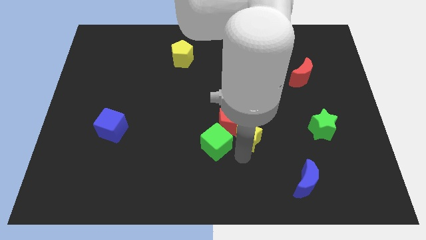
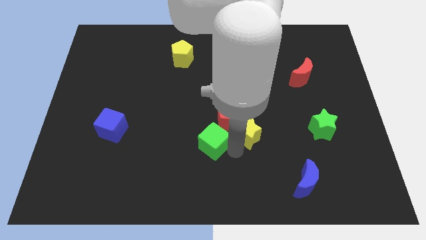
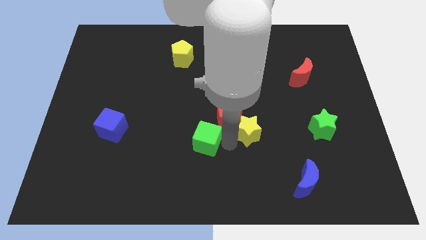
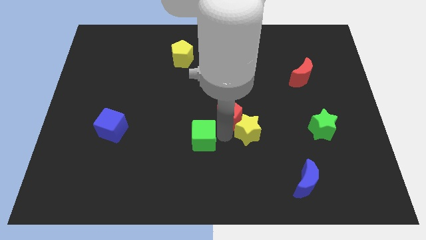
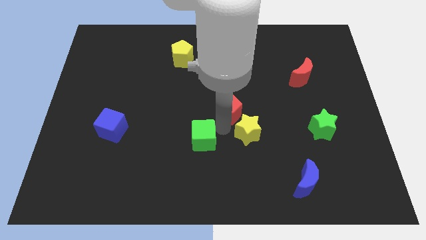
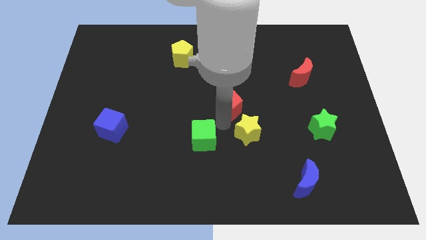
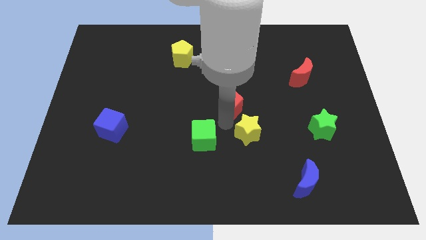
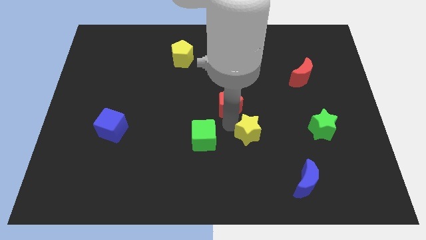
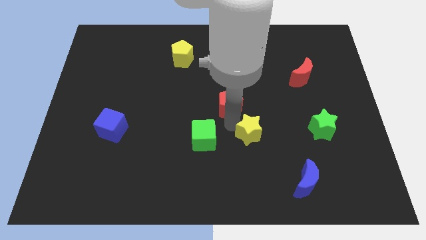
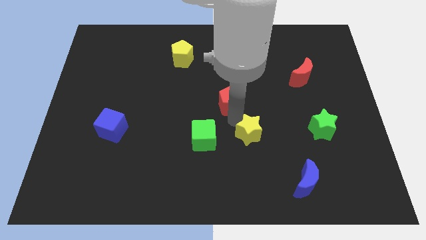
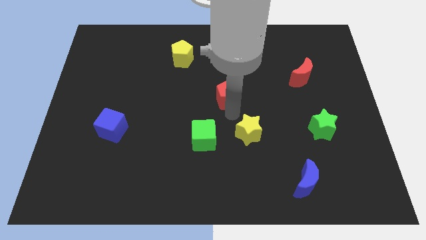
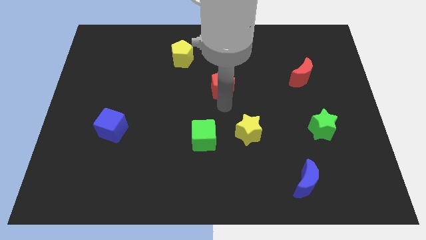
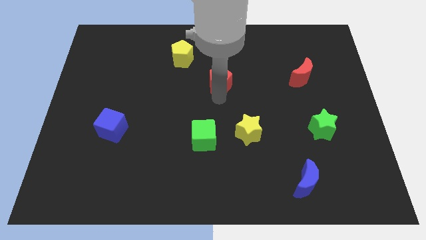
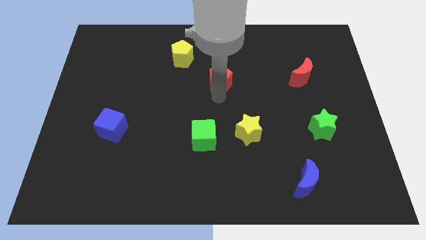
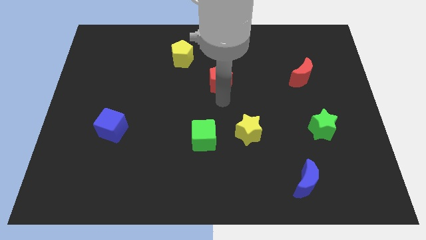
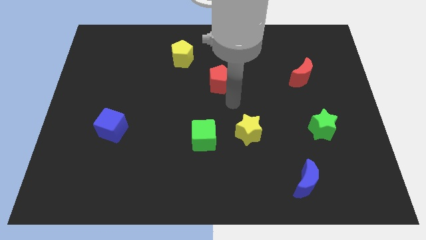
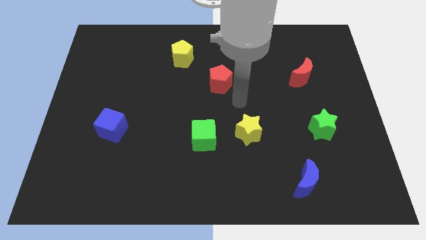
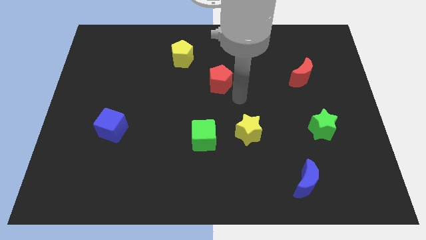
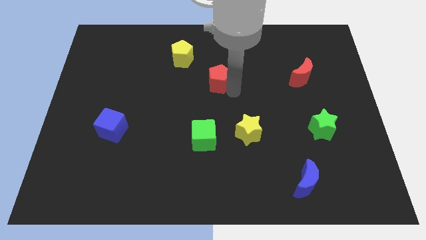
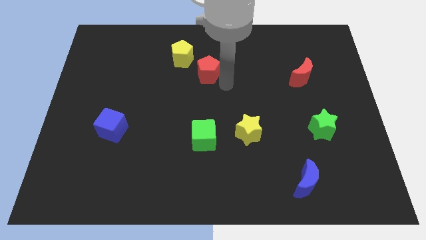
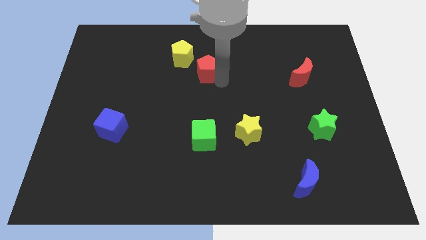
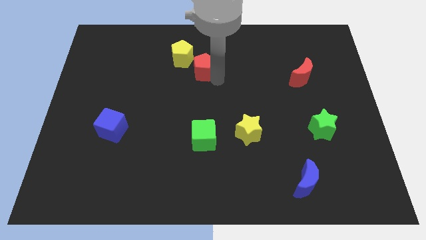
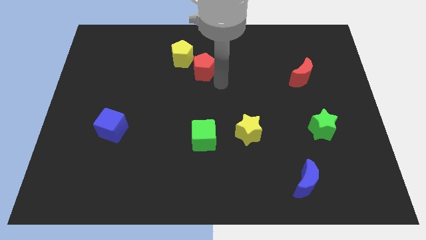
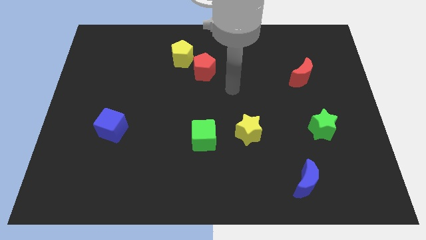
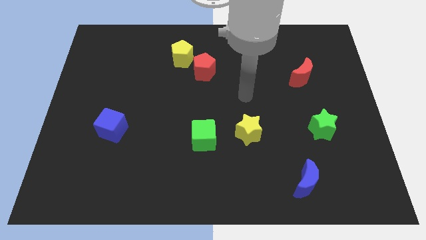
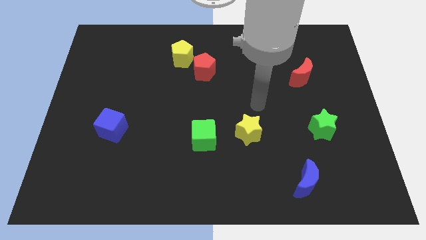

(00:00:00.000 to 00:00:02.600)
move red pentagon close to yellow pentagon

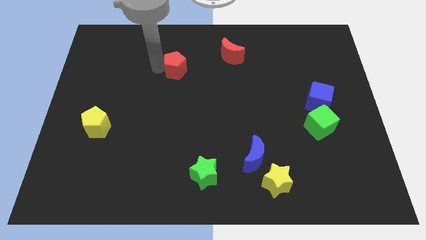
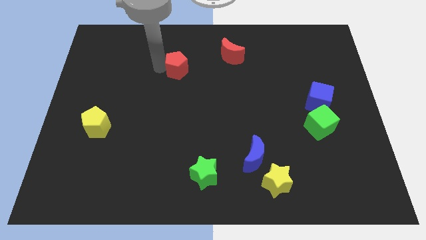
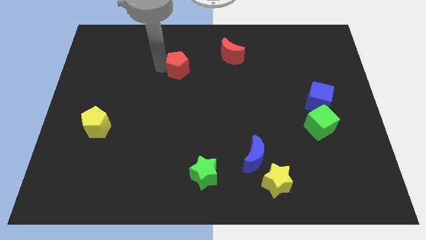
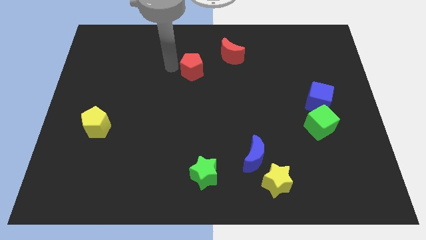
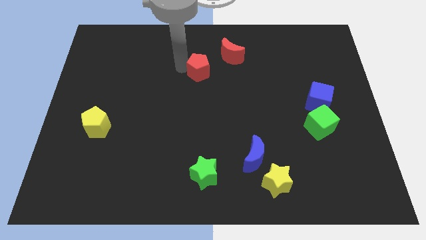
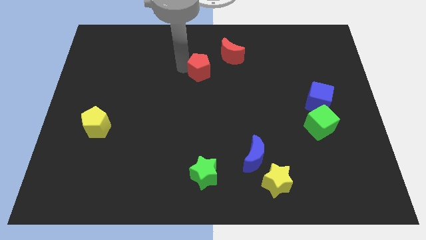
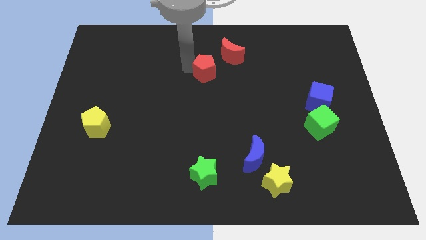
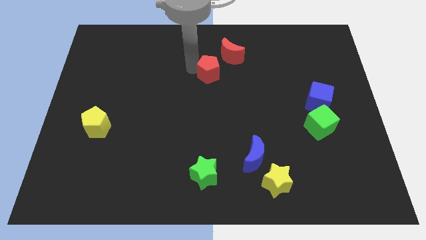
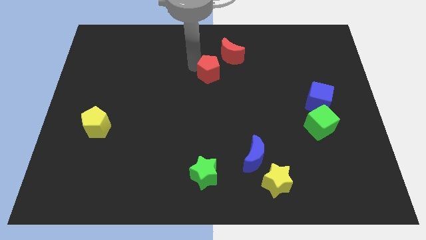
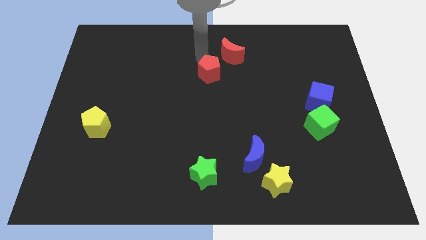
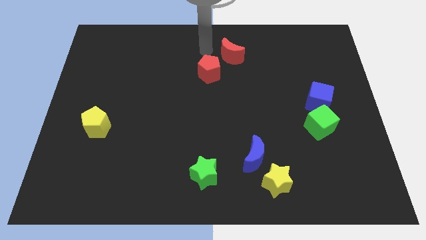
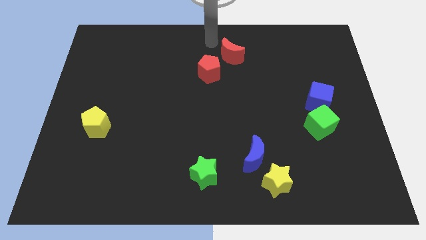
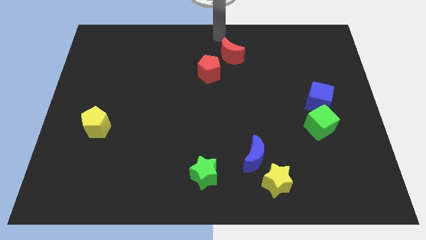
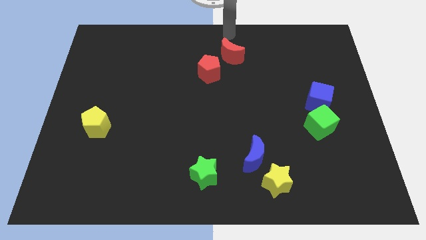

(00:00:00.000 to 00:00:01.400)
push the red pentagon to the right of the board

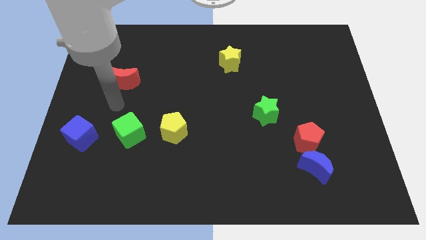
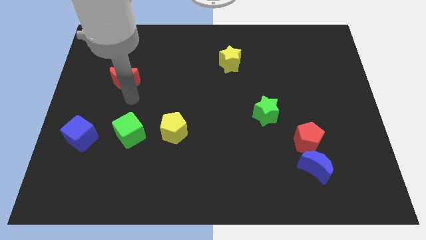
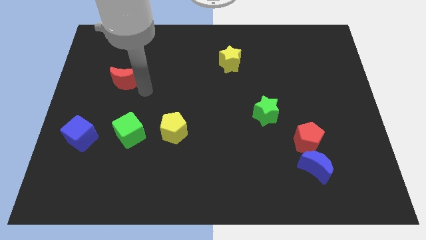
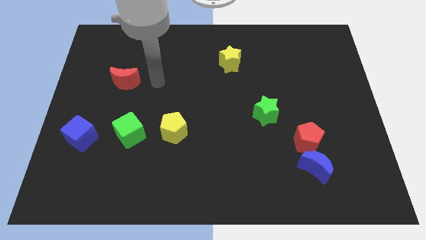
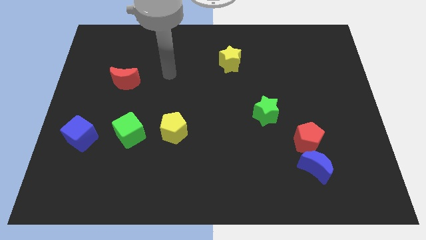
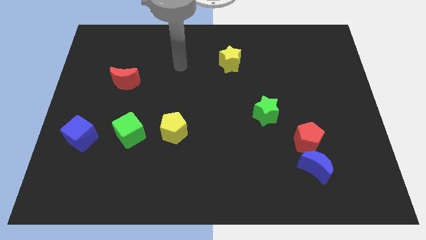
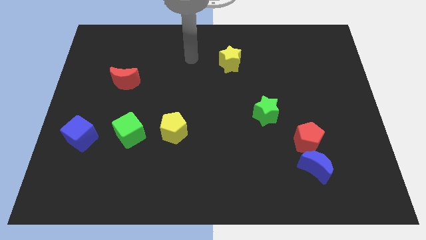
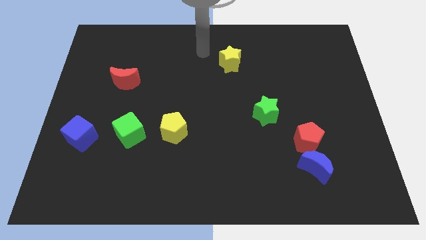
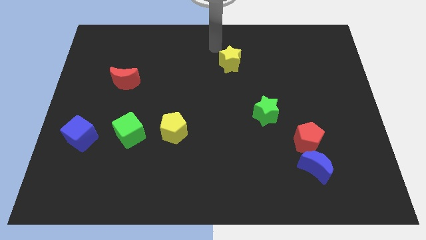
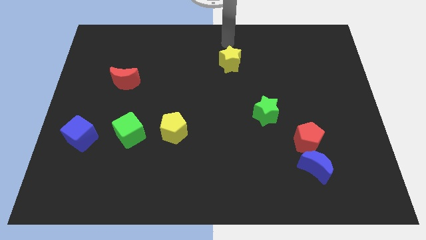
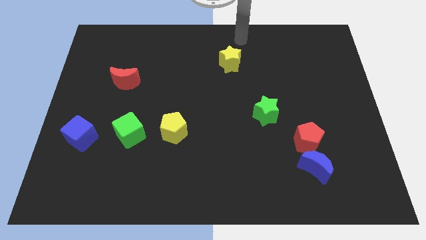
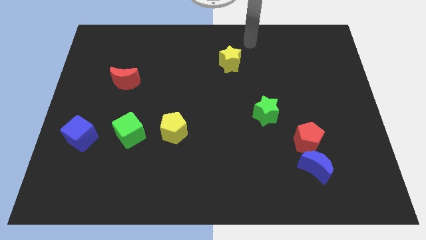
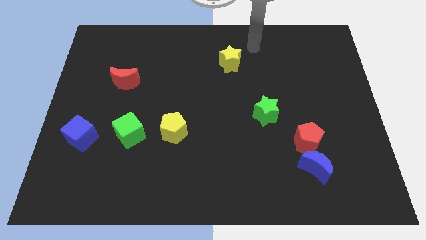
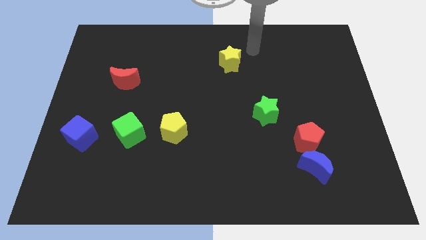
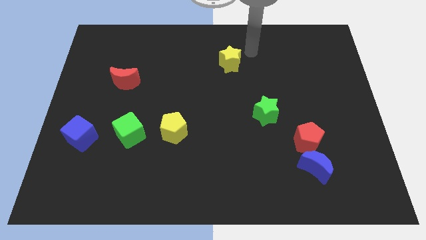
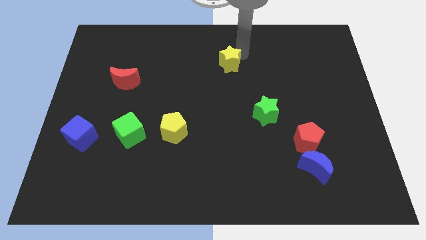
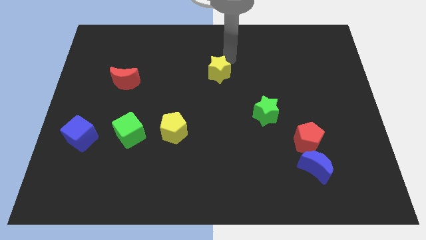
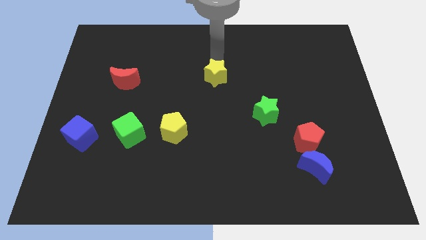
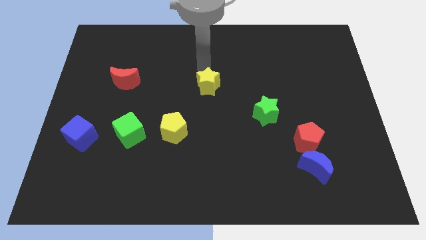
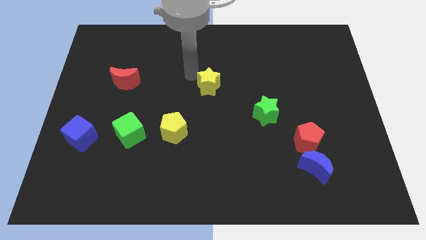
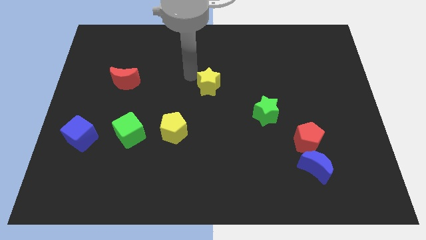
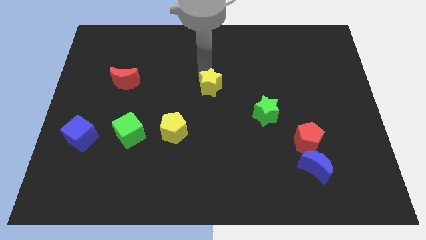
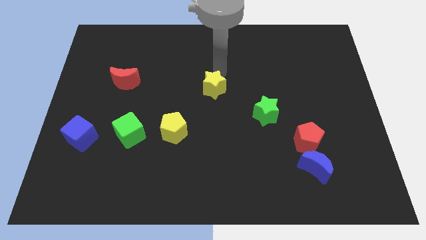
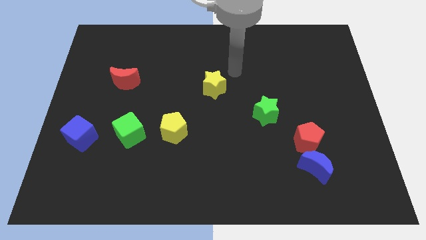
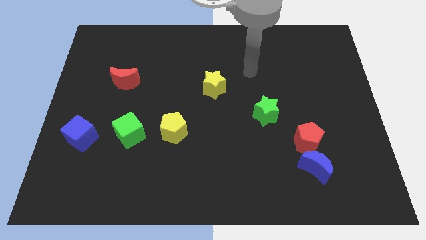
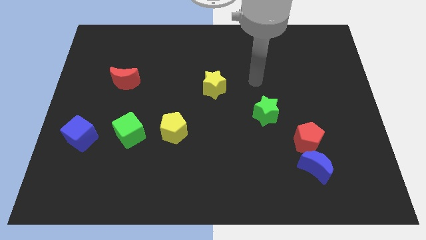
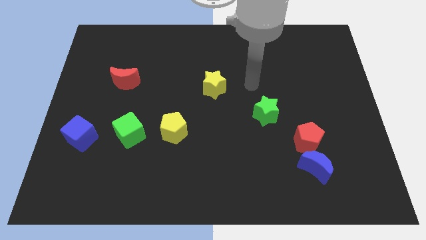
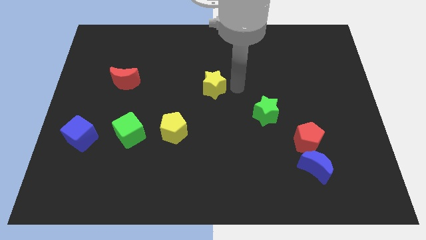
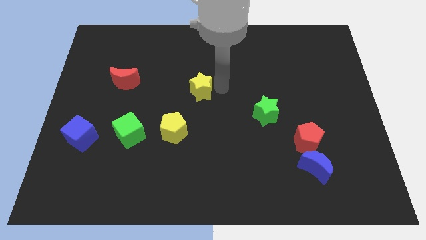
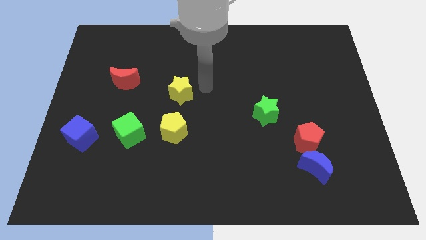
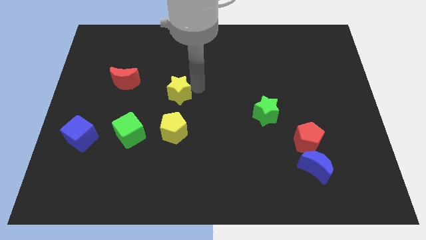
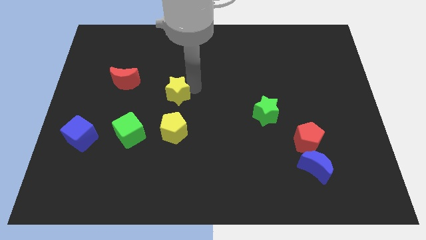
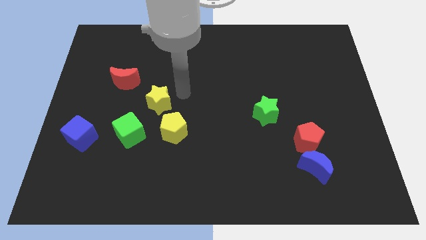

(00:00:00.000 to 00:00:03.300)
move the yellow star to the top of the yellow pentagon

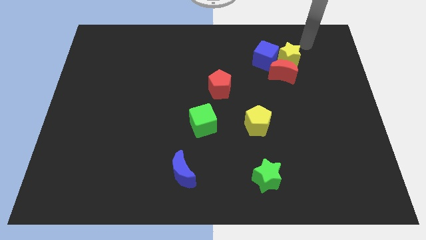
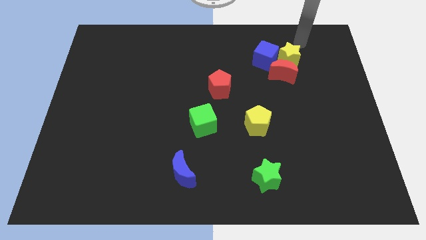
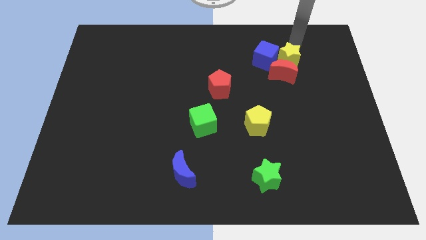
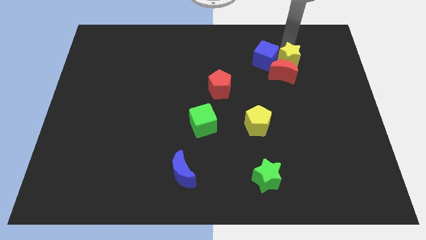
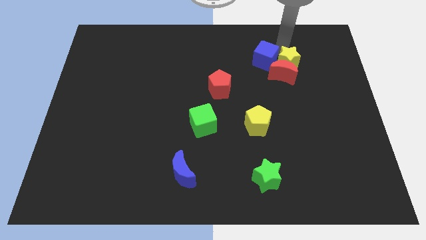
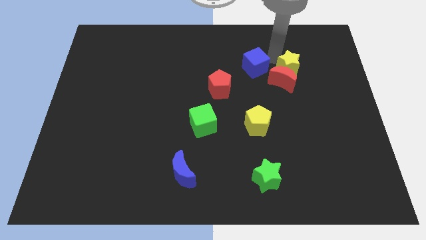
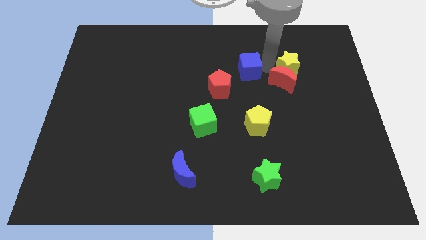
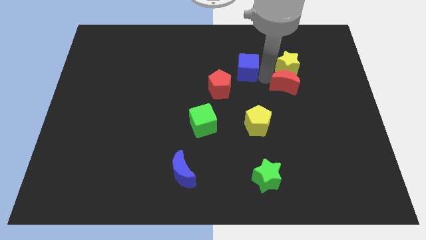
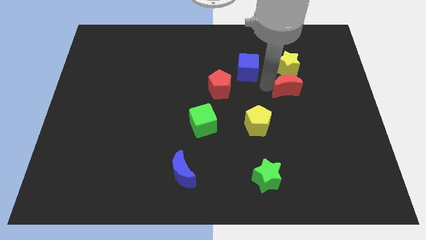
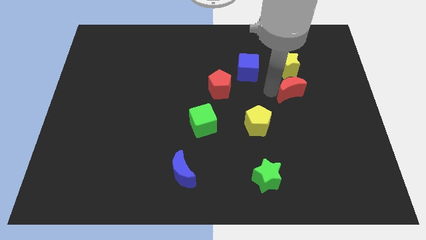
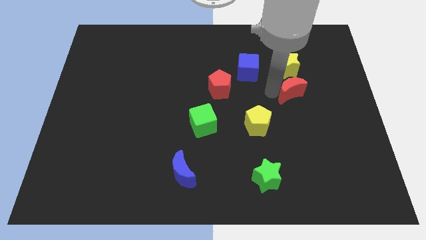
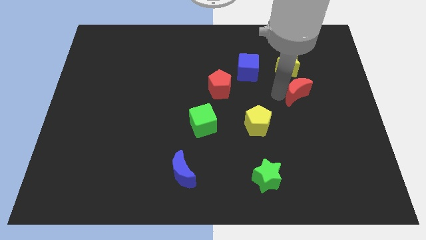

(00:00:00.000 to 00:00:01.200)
move your arm into group of blocks

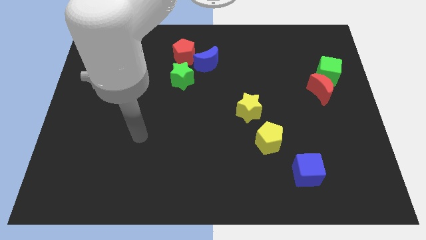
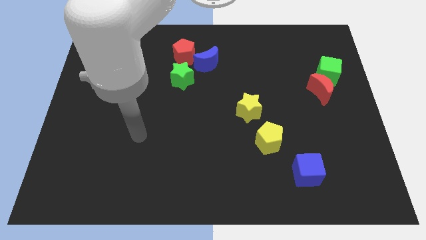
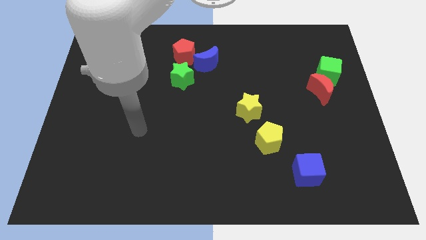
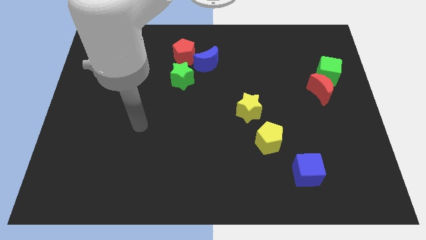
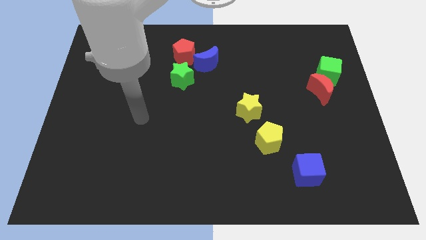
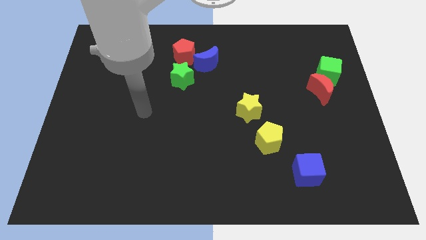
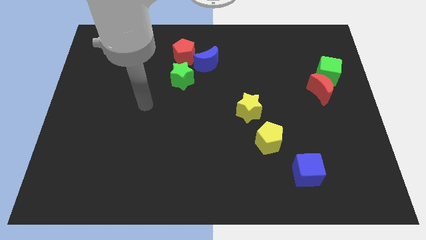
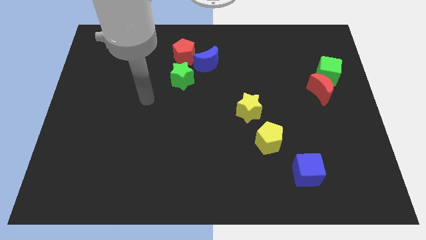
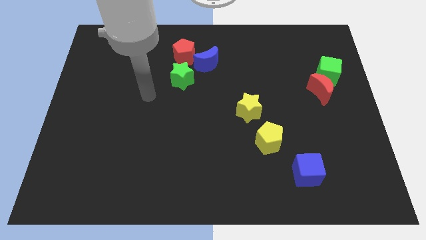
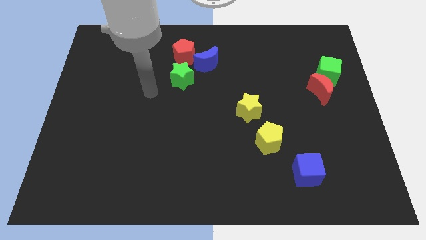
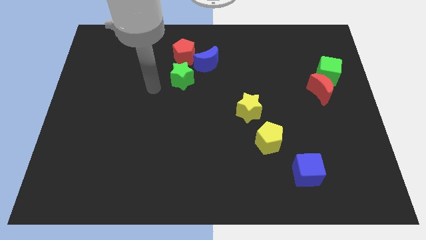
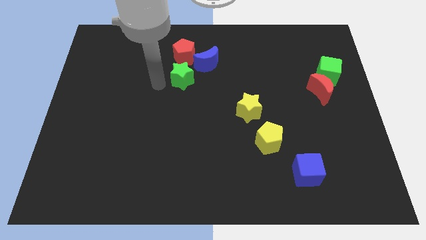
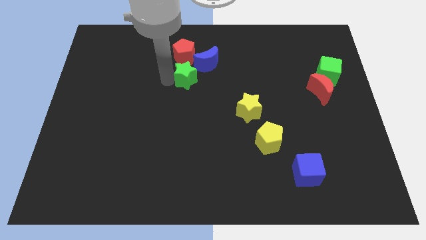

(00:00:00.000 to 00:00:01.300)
move your arm towards the green star
